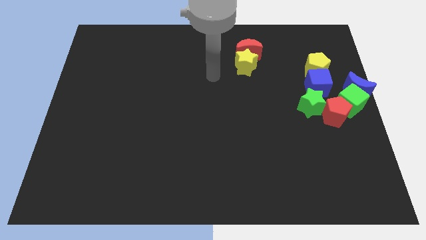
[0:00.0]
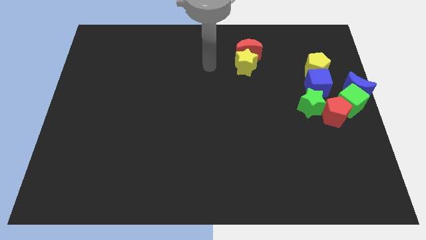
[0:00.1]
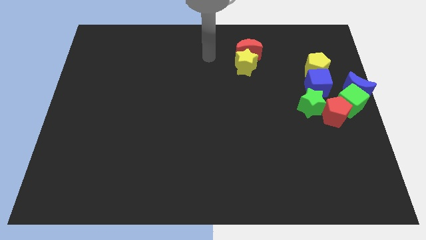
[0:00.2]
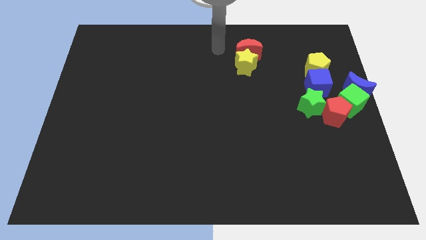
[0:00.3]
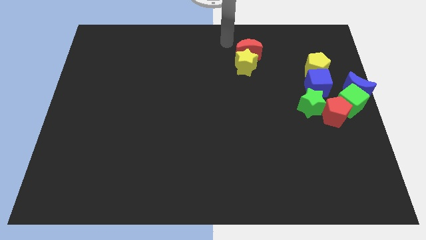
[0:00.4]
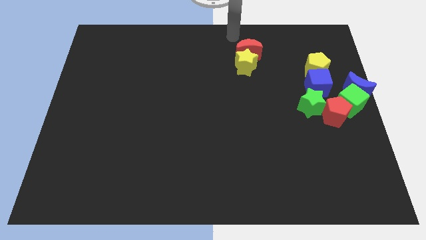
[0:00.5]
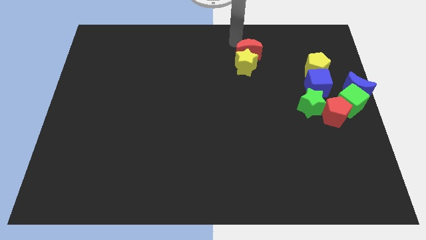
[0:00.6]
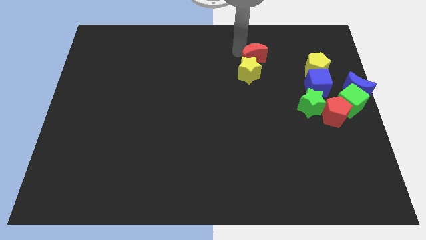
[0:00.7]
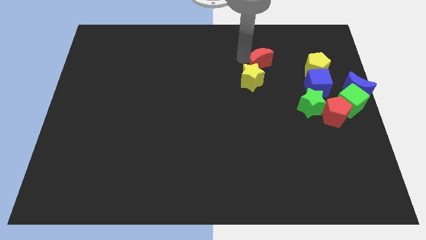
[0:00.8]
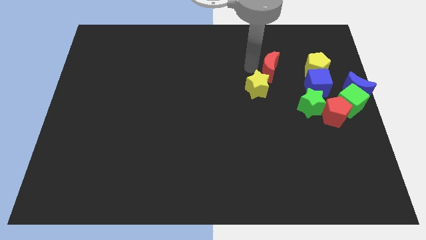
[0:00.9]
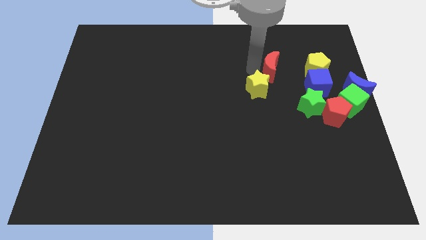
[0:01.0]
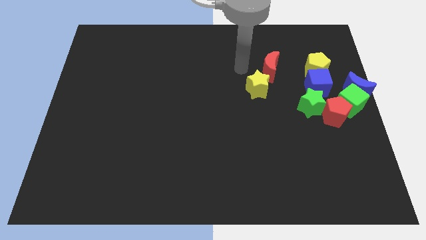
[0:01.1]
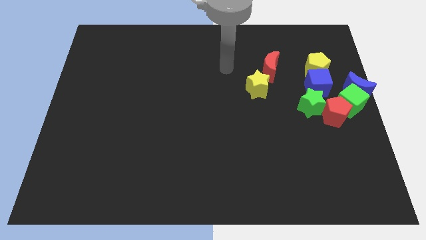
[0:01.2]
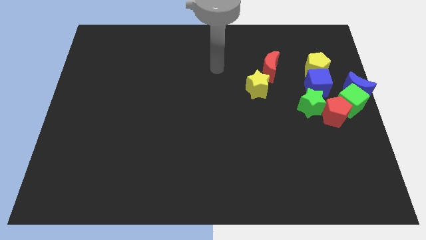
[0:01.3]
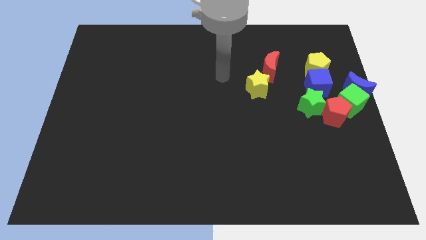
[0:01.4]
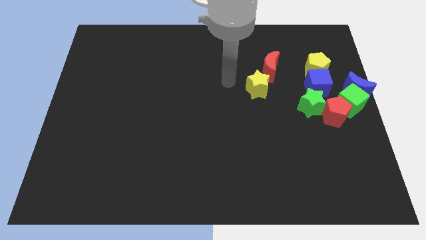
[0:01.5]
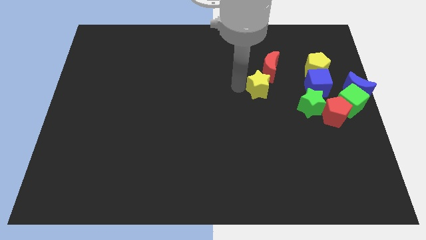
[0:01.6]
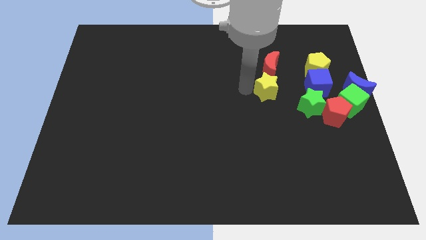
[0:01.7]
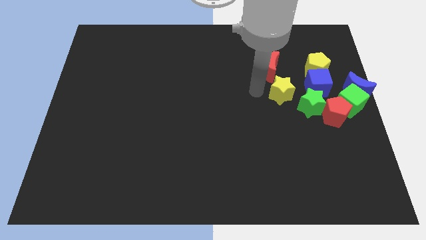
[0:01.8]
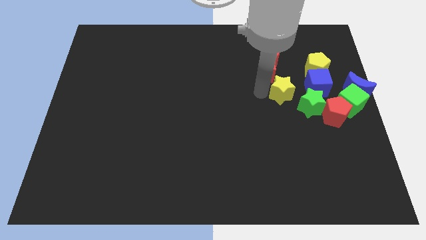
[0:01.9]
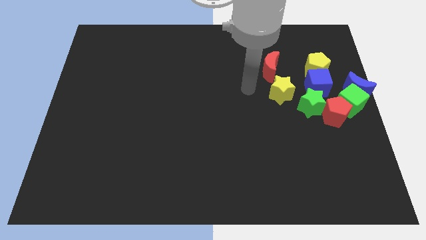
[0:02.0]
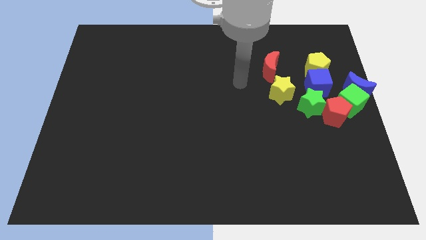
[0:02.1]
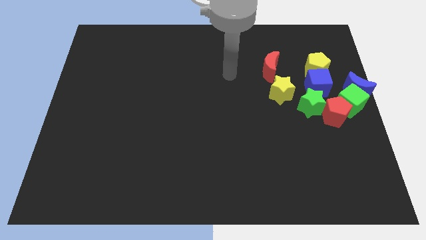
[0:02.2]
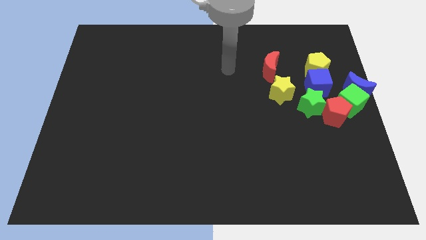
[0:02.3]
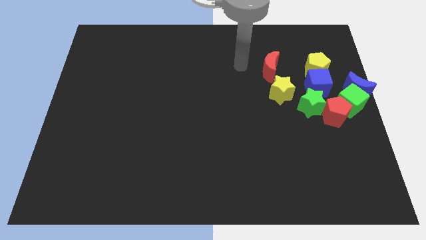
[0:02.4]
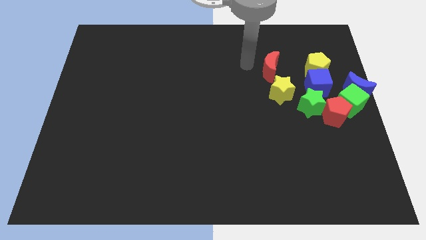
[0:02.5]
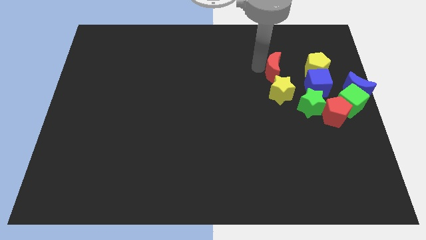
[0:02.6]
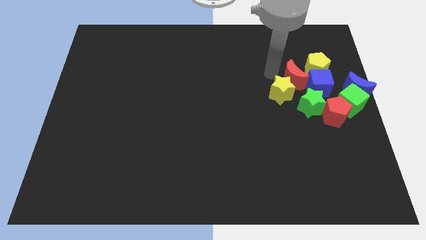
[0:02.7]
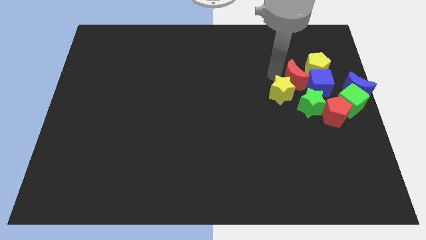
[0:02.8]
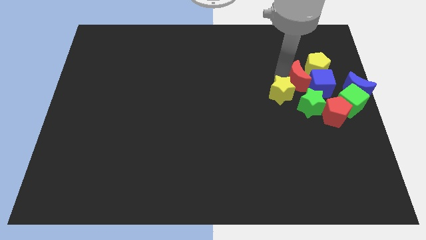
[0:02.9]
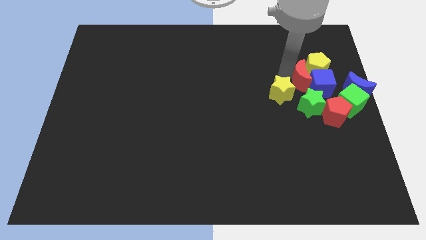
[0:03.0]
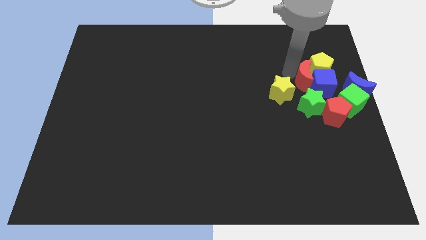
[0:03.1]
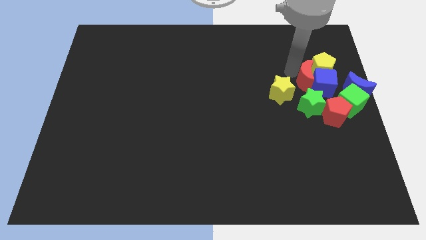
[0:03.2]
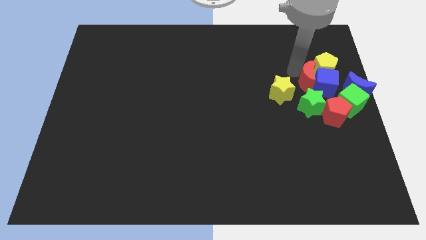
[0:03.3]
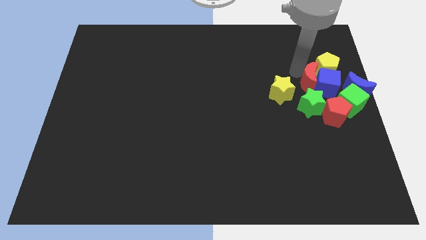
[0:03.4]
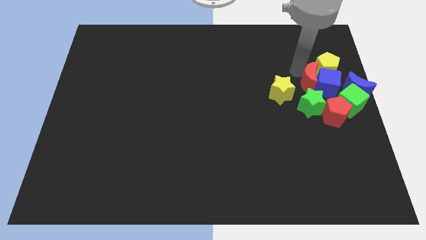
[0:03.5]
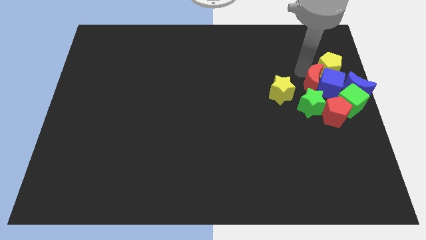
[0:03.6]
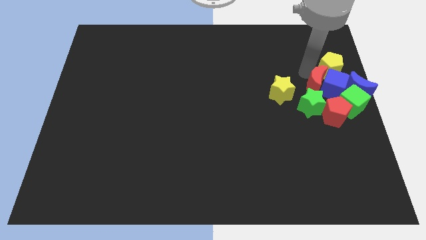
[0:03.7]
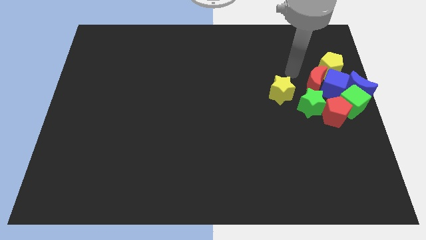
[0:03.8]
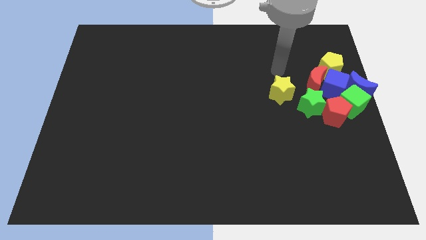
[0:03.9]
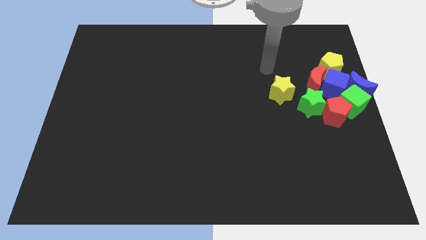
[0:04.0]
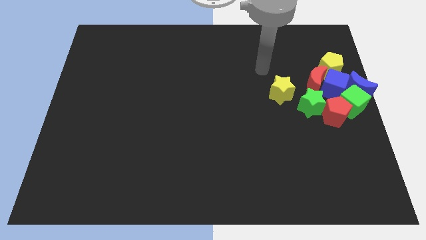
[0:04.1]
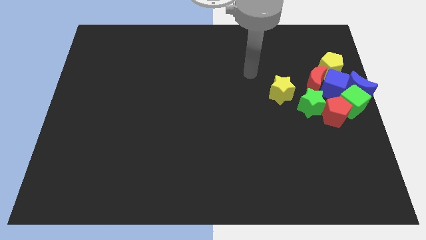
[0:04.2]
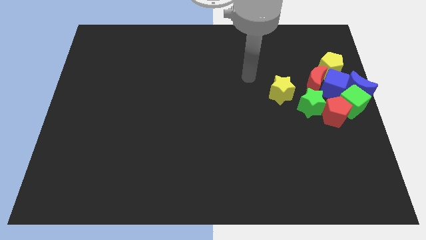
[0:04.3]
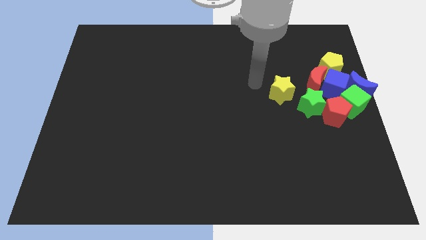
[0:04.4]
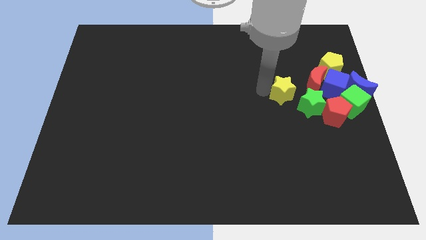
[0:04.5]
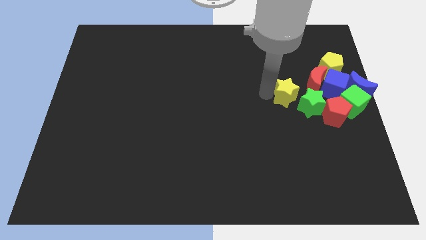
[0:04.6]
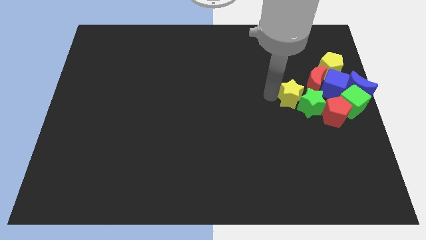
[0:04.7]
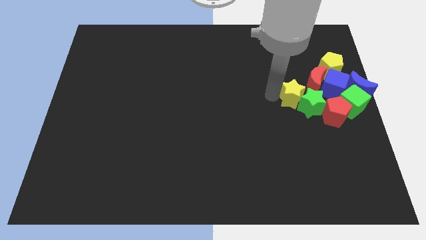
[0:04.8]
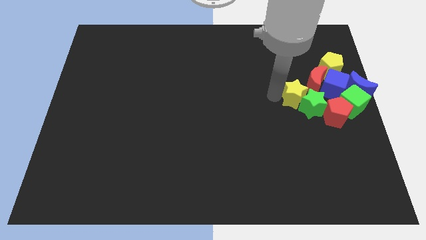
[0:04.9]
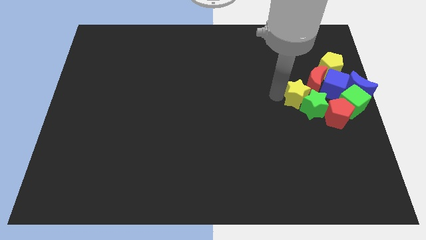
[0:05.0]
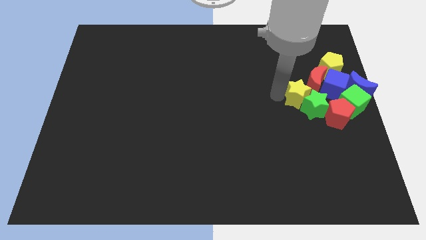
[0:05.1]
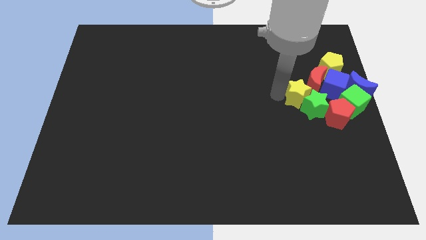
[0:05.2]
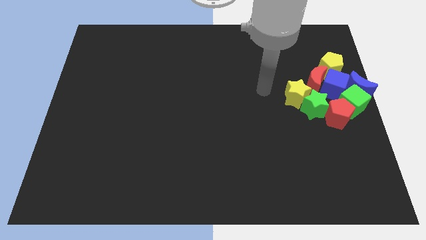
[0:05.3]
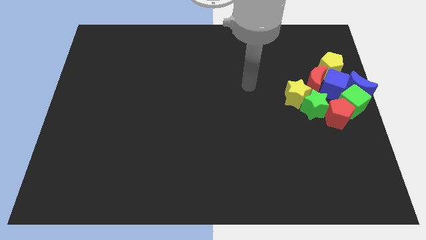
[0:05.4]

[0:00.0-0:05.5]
push the yellow star and red moon into the group of blocks together

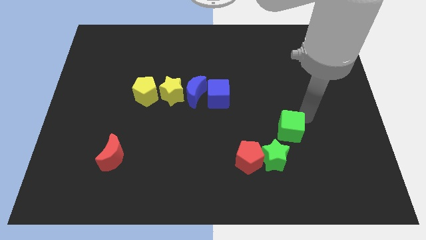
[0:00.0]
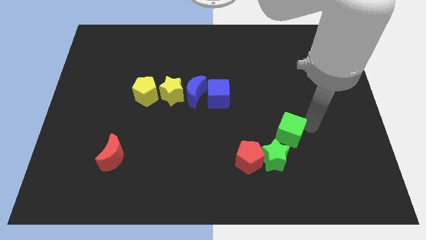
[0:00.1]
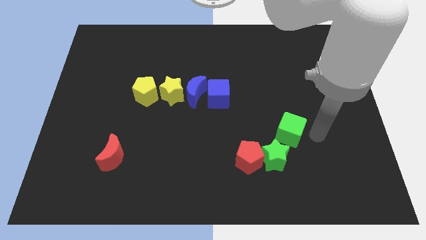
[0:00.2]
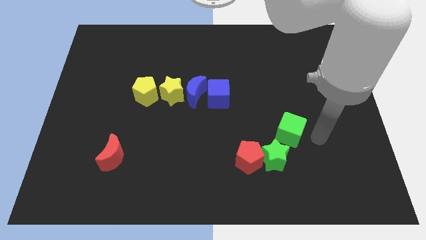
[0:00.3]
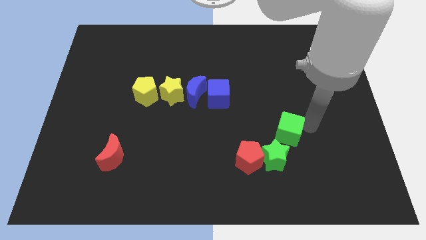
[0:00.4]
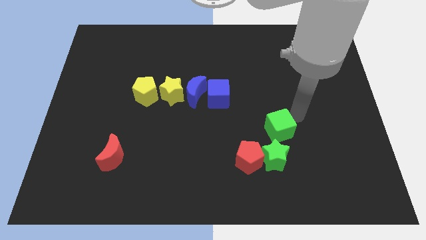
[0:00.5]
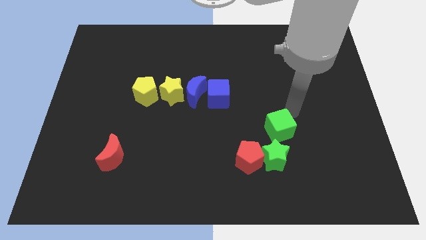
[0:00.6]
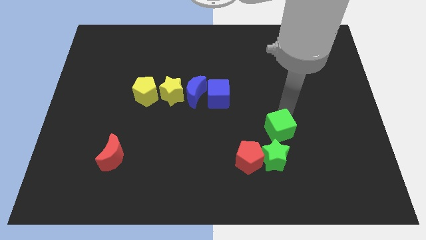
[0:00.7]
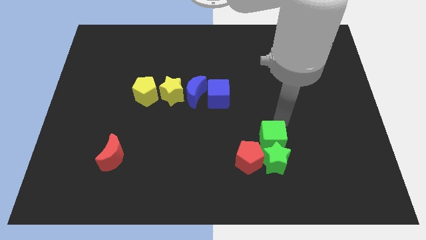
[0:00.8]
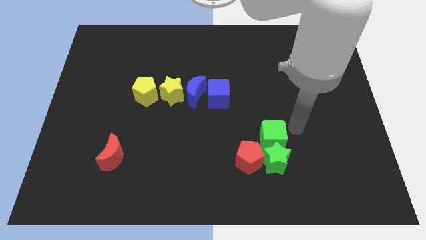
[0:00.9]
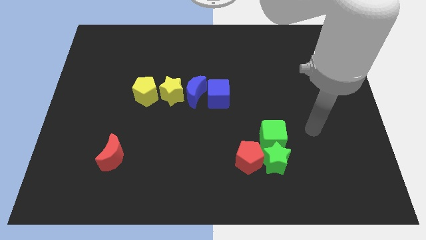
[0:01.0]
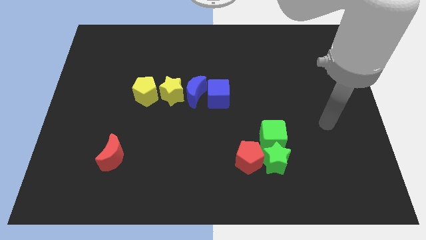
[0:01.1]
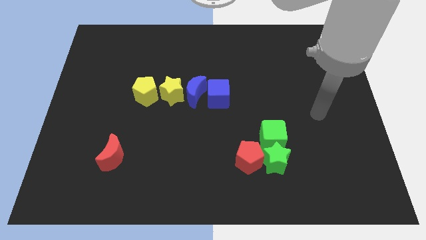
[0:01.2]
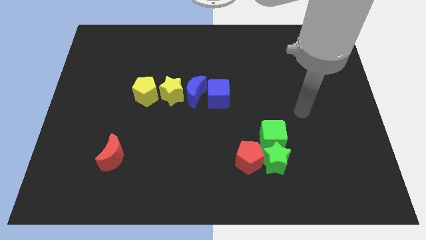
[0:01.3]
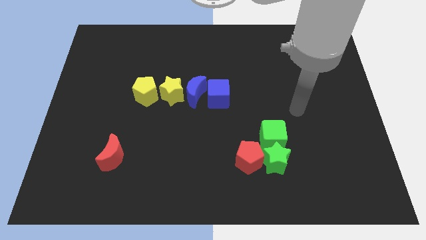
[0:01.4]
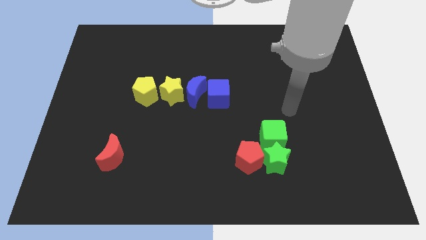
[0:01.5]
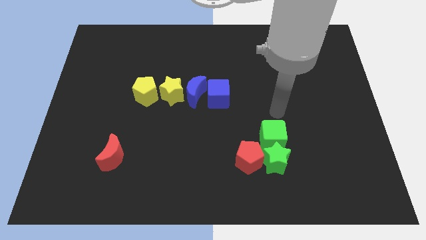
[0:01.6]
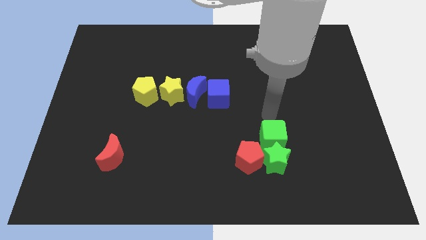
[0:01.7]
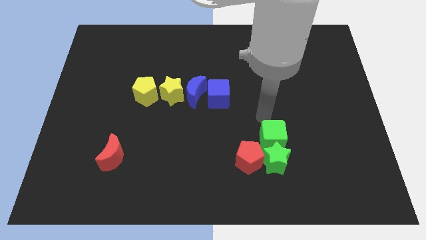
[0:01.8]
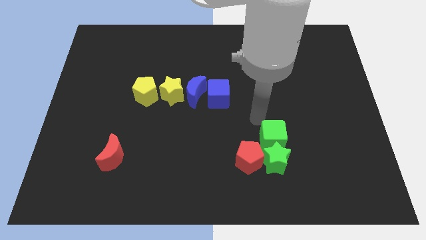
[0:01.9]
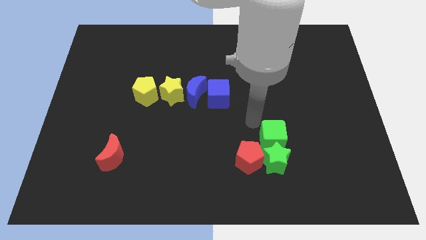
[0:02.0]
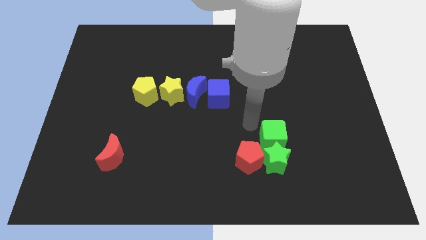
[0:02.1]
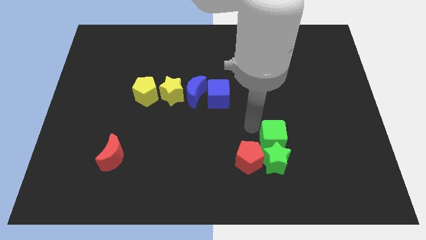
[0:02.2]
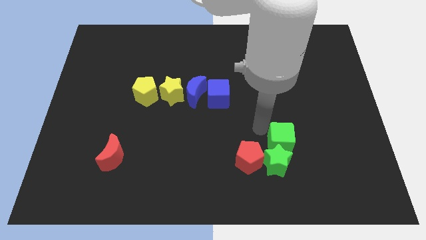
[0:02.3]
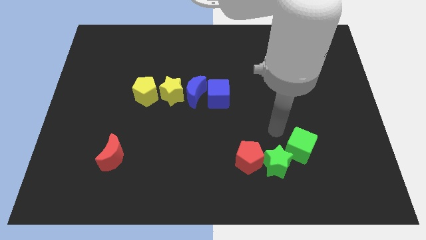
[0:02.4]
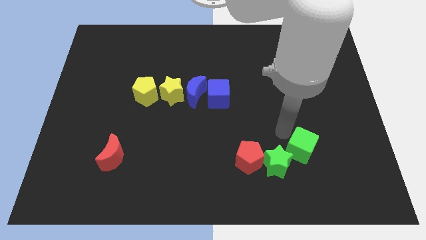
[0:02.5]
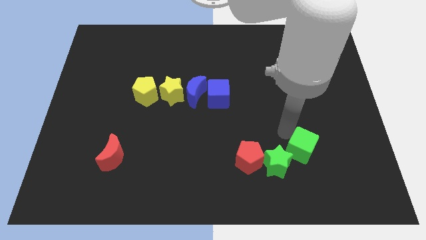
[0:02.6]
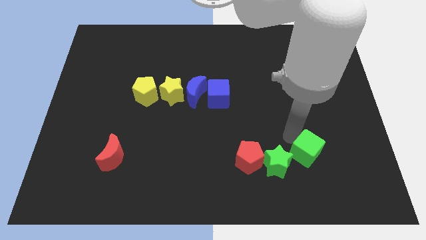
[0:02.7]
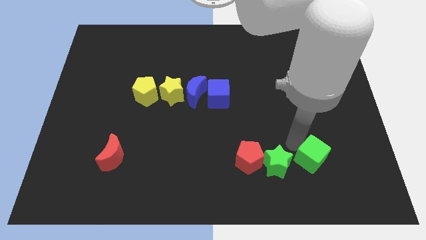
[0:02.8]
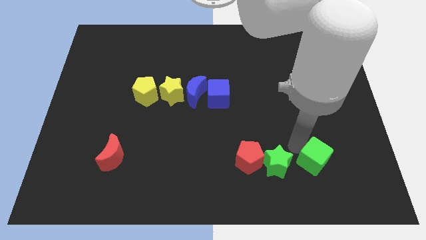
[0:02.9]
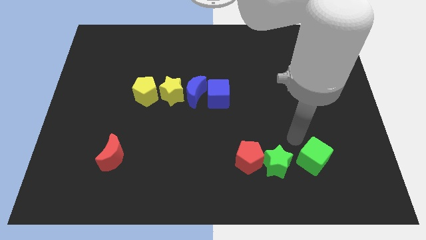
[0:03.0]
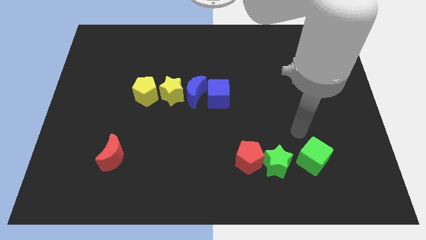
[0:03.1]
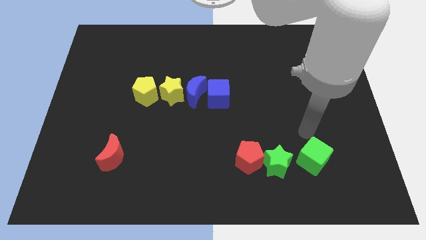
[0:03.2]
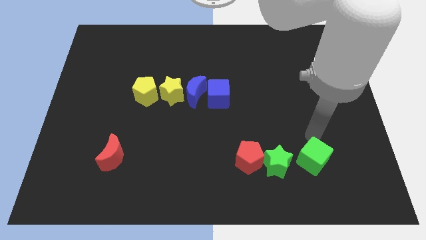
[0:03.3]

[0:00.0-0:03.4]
place green cube to the right of the green star
